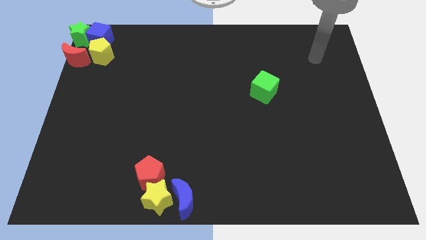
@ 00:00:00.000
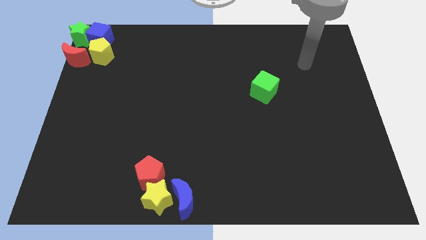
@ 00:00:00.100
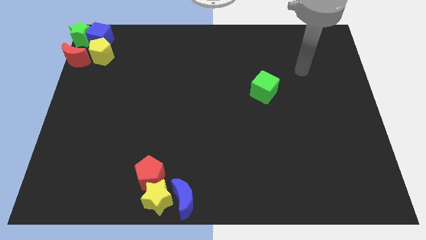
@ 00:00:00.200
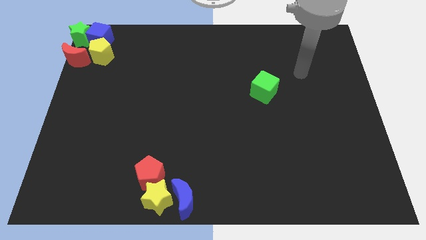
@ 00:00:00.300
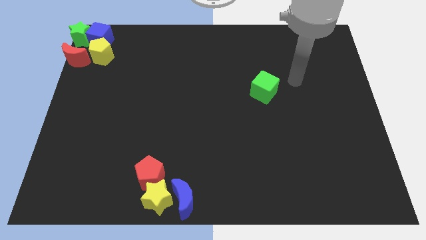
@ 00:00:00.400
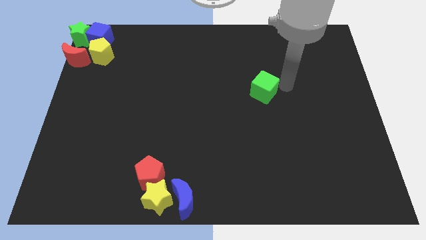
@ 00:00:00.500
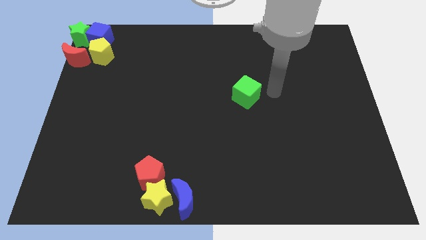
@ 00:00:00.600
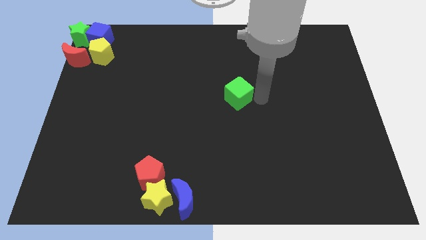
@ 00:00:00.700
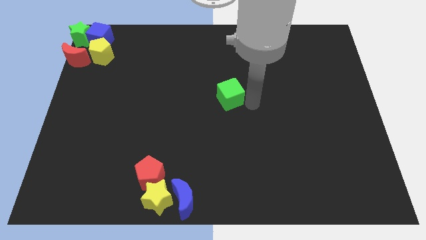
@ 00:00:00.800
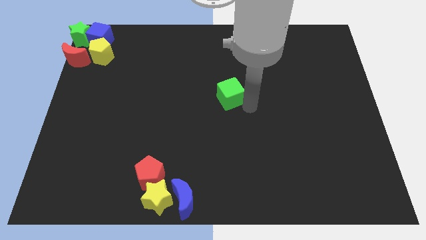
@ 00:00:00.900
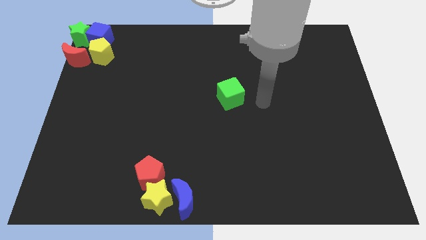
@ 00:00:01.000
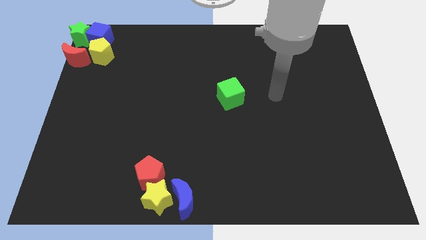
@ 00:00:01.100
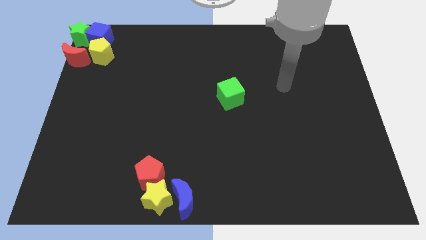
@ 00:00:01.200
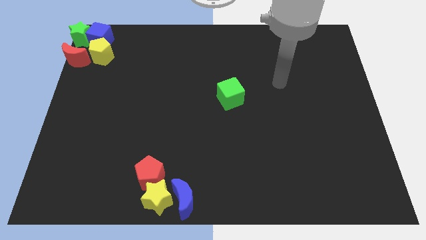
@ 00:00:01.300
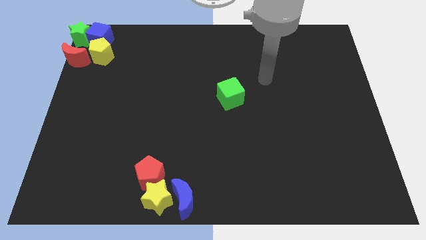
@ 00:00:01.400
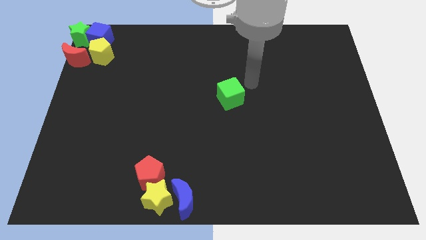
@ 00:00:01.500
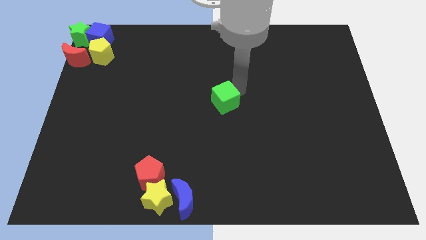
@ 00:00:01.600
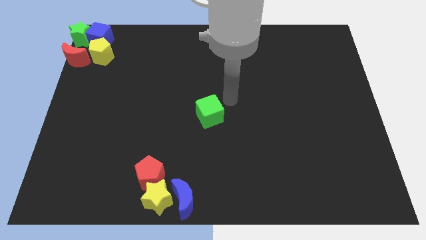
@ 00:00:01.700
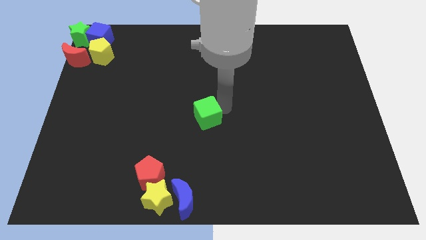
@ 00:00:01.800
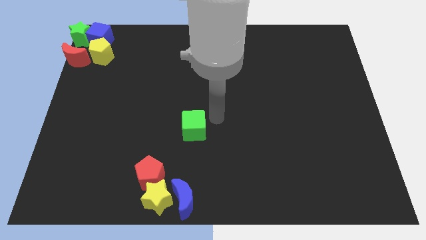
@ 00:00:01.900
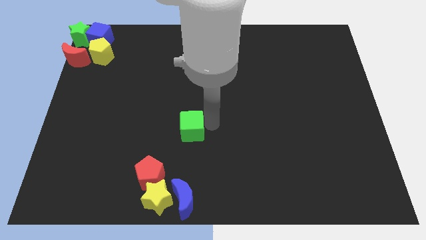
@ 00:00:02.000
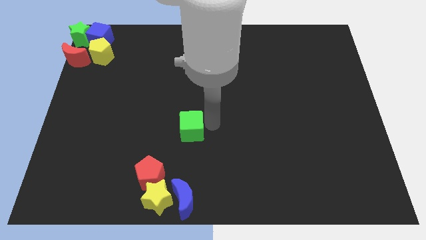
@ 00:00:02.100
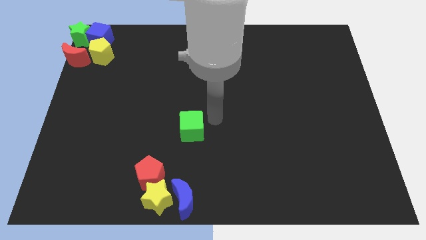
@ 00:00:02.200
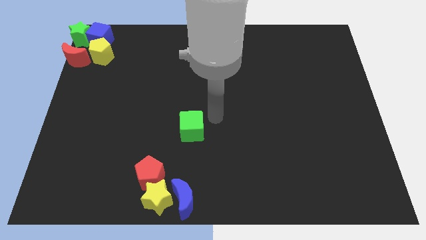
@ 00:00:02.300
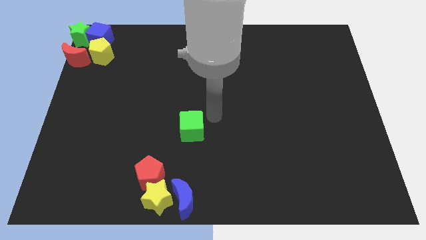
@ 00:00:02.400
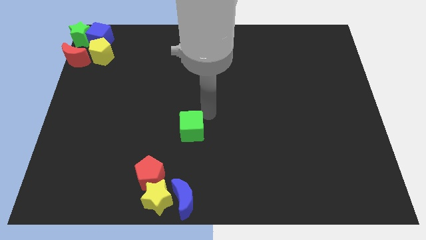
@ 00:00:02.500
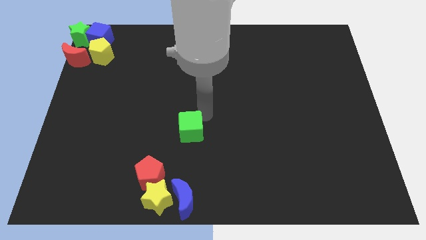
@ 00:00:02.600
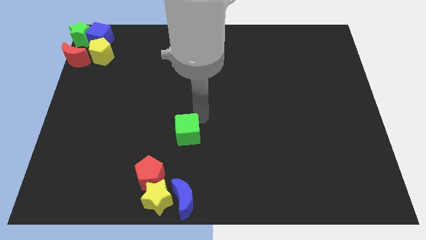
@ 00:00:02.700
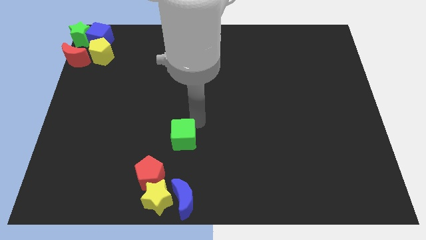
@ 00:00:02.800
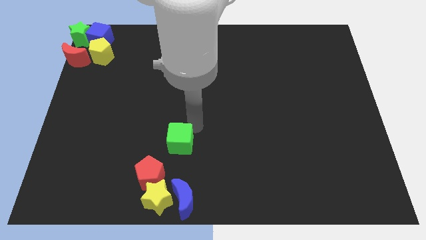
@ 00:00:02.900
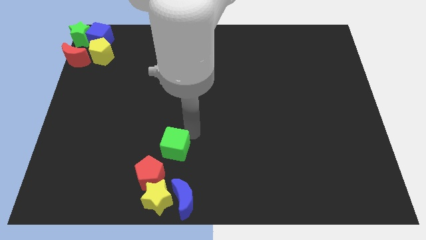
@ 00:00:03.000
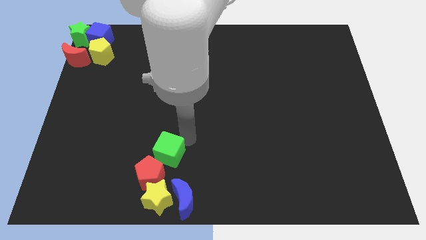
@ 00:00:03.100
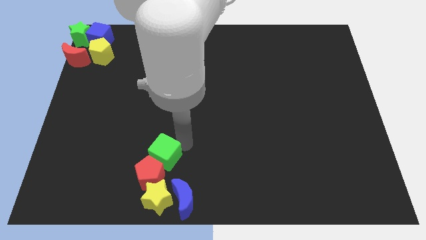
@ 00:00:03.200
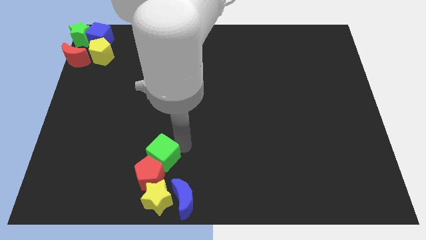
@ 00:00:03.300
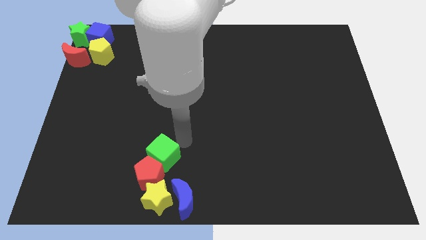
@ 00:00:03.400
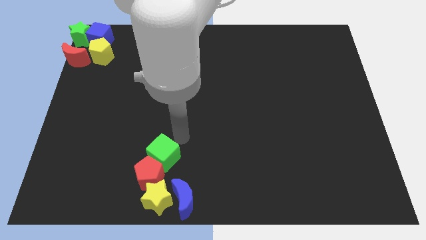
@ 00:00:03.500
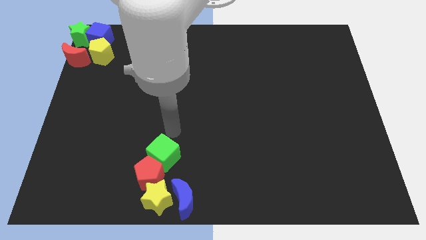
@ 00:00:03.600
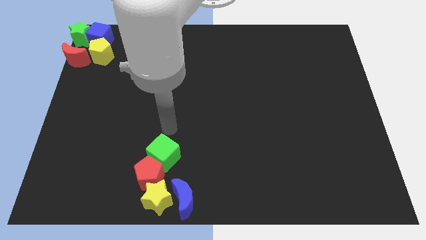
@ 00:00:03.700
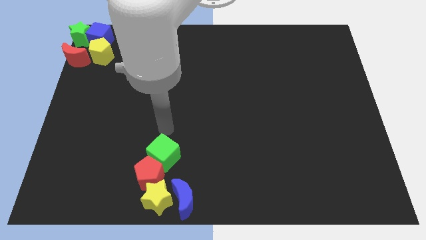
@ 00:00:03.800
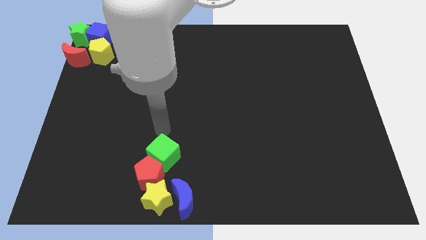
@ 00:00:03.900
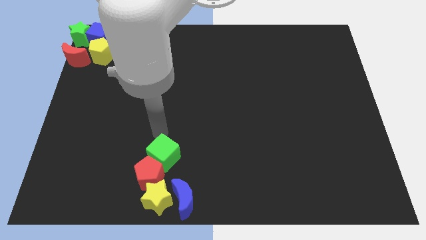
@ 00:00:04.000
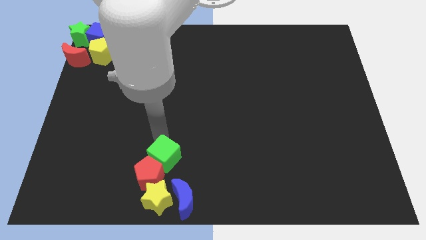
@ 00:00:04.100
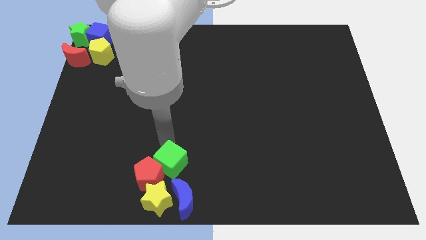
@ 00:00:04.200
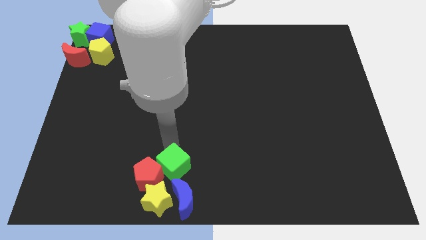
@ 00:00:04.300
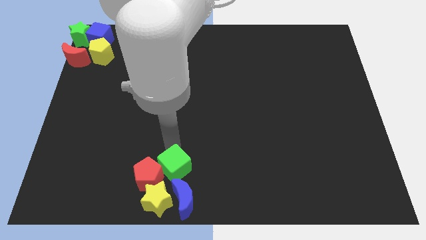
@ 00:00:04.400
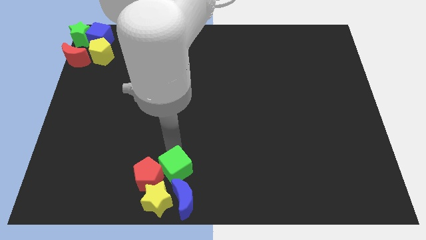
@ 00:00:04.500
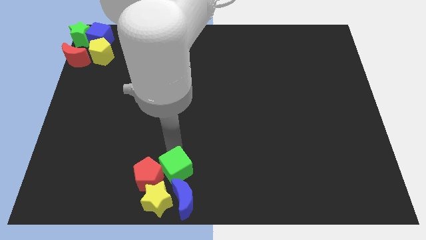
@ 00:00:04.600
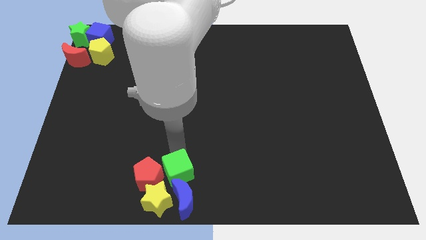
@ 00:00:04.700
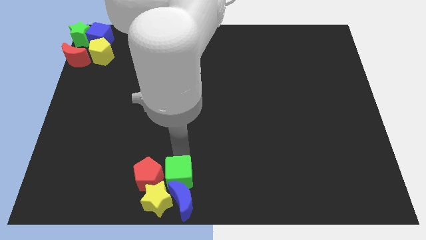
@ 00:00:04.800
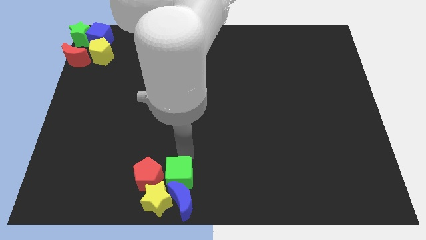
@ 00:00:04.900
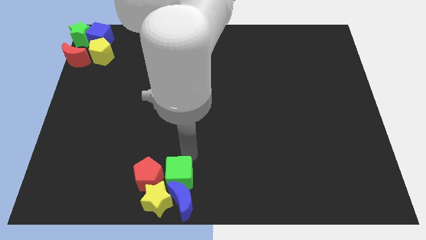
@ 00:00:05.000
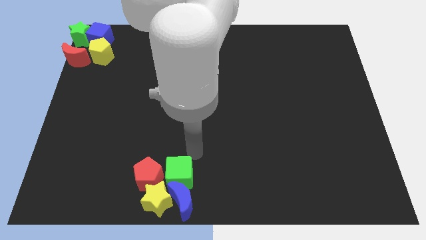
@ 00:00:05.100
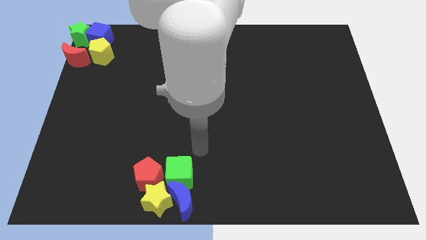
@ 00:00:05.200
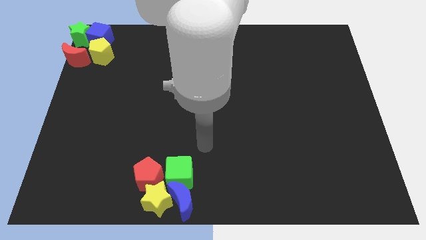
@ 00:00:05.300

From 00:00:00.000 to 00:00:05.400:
move the green cube into the top of blue moon

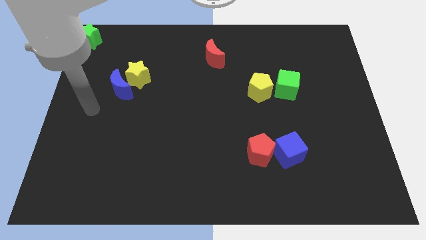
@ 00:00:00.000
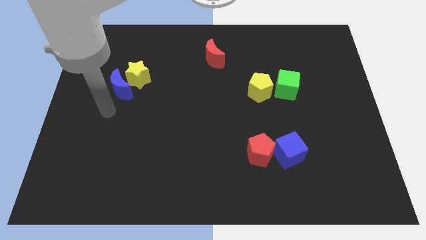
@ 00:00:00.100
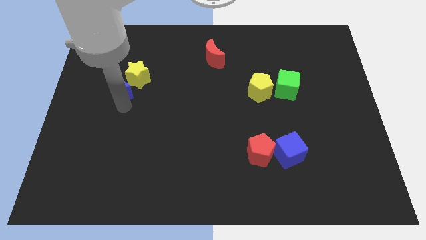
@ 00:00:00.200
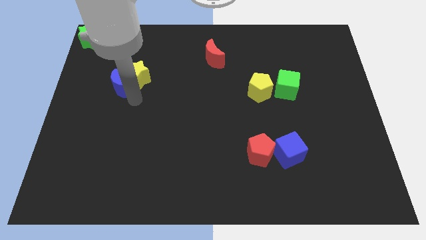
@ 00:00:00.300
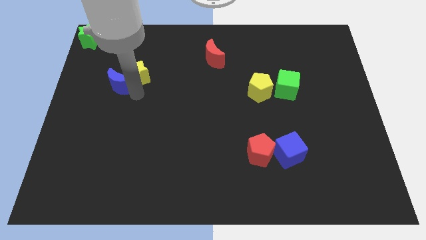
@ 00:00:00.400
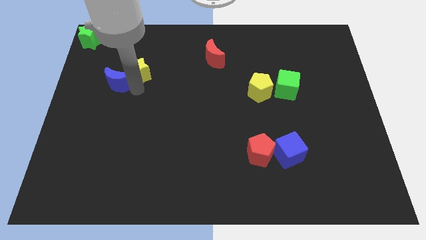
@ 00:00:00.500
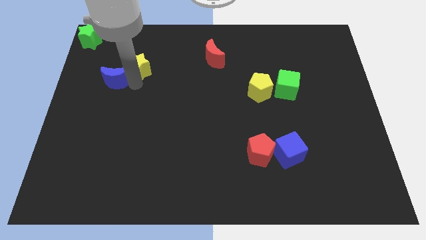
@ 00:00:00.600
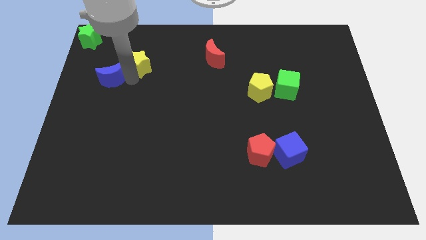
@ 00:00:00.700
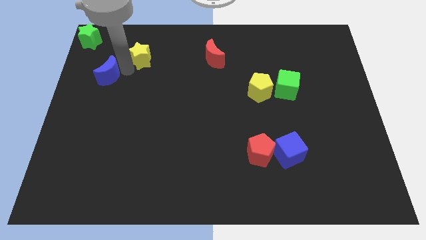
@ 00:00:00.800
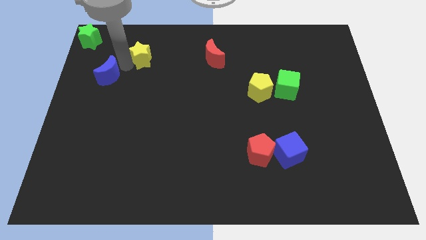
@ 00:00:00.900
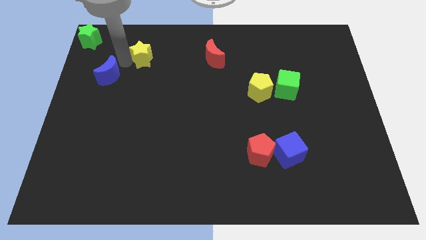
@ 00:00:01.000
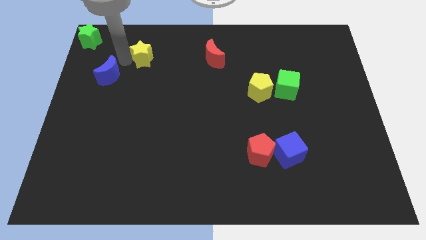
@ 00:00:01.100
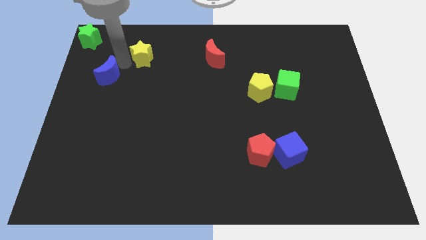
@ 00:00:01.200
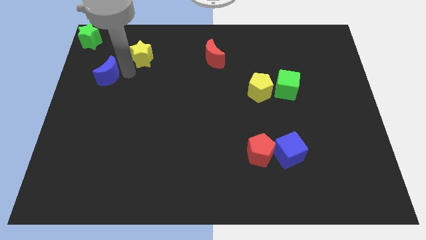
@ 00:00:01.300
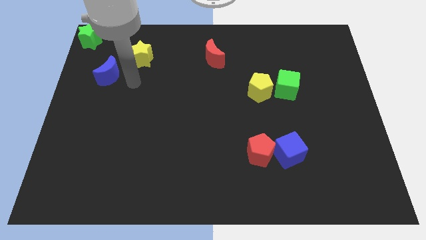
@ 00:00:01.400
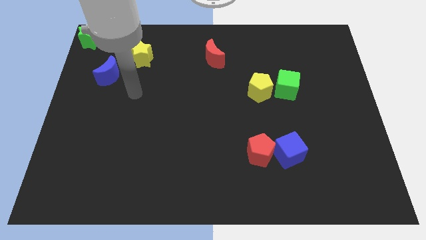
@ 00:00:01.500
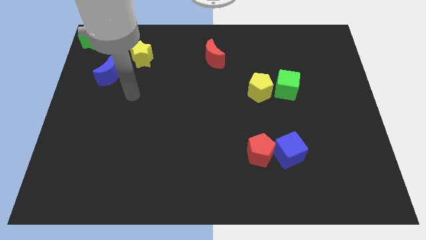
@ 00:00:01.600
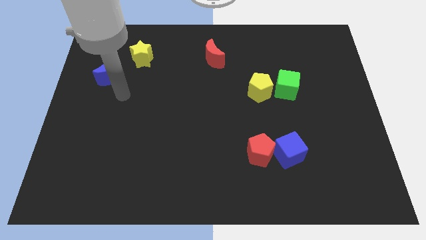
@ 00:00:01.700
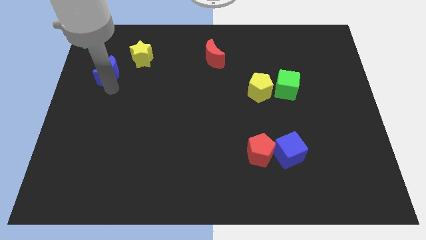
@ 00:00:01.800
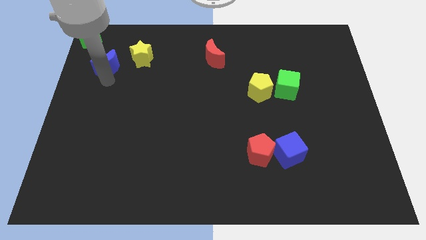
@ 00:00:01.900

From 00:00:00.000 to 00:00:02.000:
push blue crescent and yellow star apart

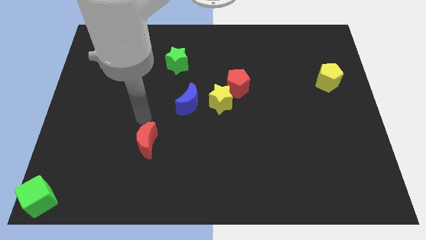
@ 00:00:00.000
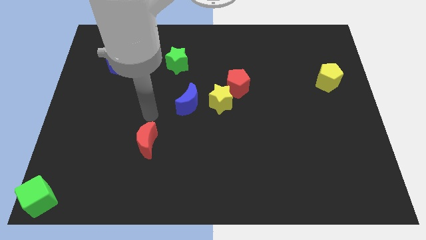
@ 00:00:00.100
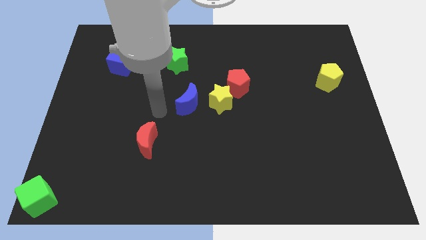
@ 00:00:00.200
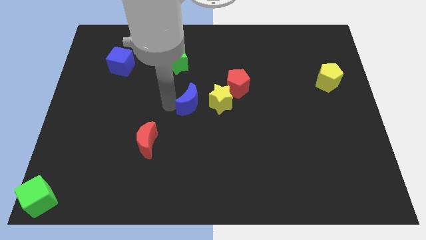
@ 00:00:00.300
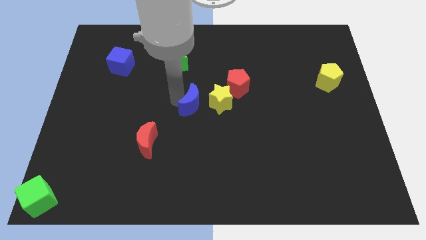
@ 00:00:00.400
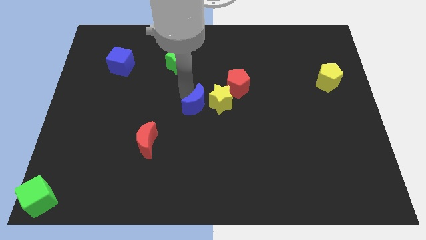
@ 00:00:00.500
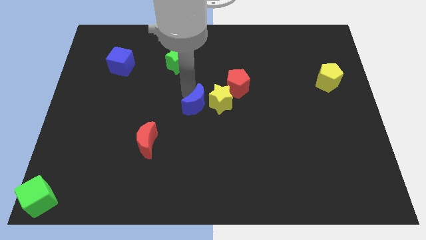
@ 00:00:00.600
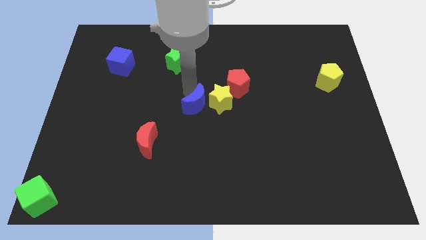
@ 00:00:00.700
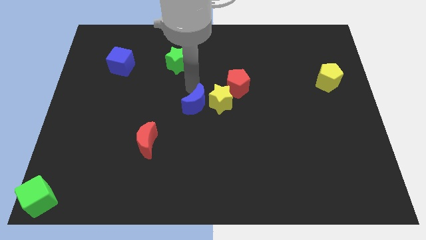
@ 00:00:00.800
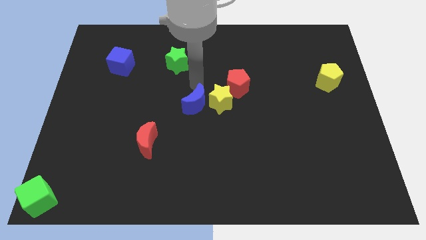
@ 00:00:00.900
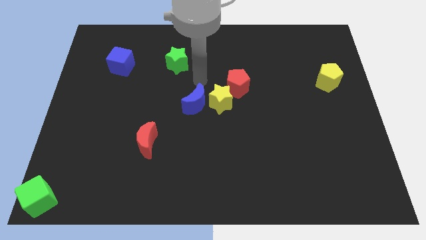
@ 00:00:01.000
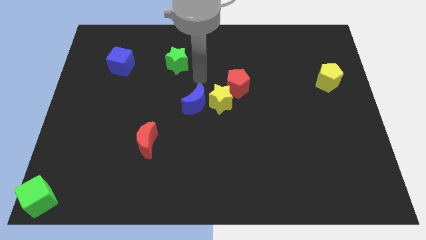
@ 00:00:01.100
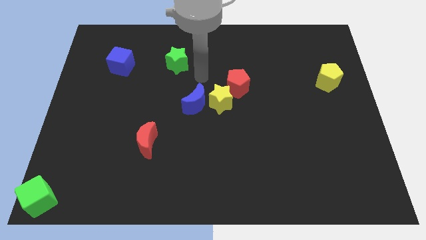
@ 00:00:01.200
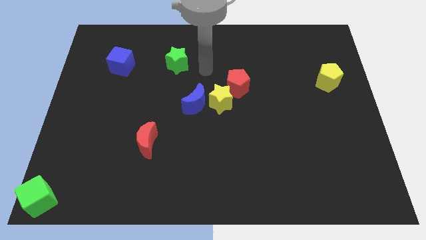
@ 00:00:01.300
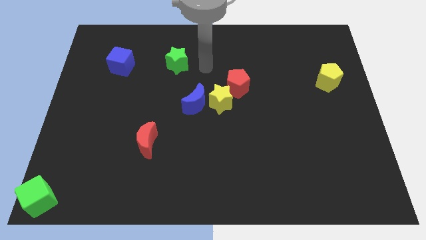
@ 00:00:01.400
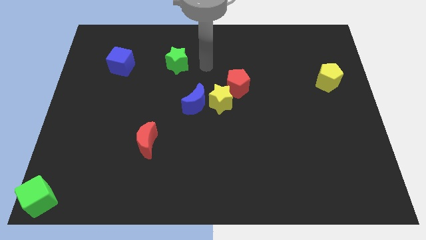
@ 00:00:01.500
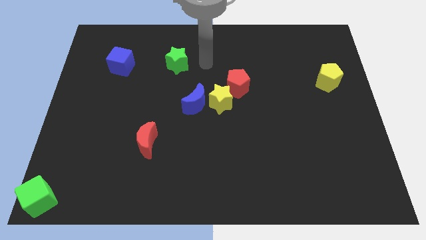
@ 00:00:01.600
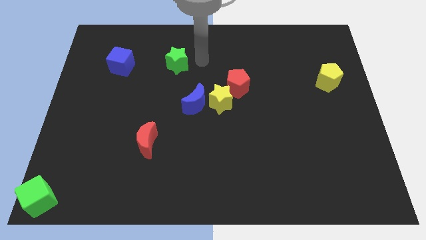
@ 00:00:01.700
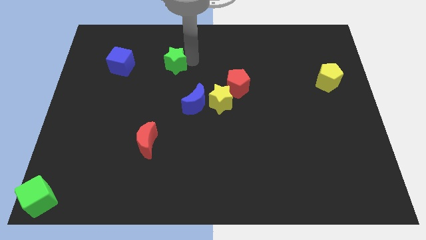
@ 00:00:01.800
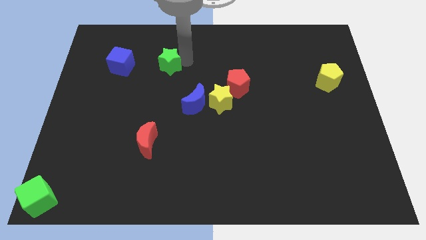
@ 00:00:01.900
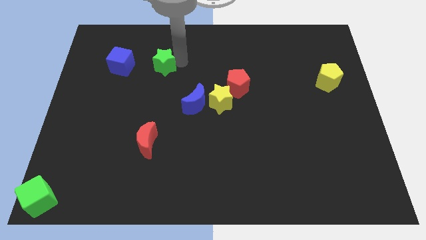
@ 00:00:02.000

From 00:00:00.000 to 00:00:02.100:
tap green star
